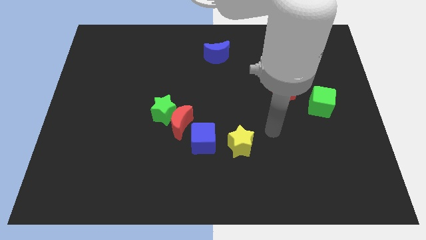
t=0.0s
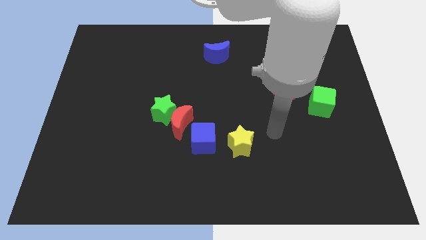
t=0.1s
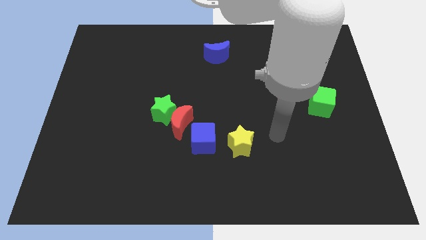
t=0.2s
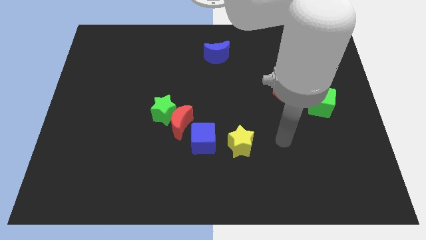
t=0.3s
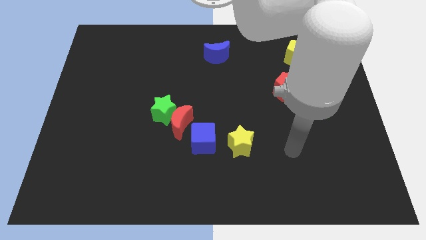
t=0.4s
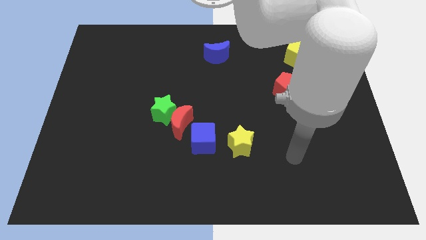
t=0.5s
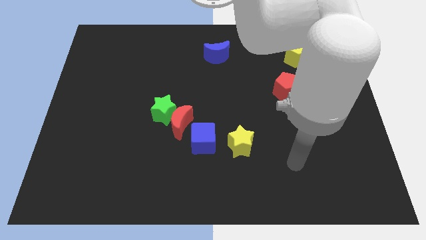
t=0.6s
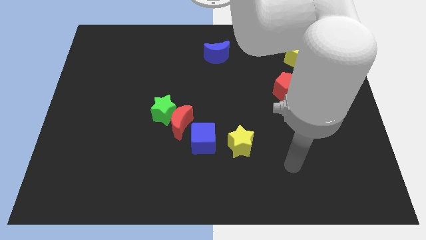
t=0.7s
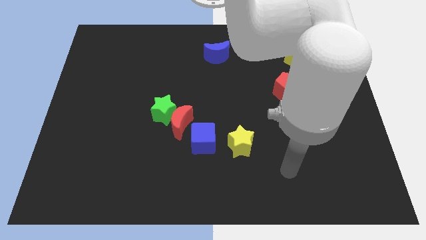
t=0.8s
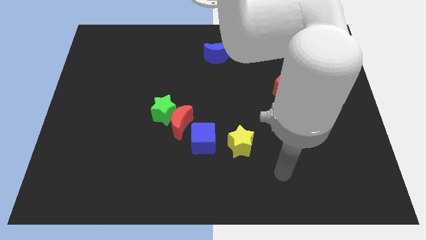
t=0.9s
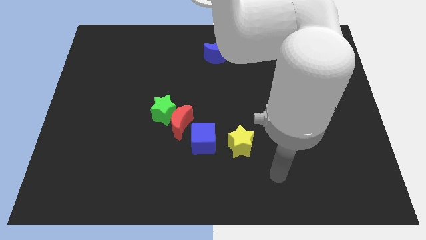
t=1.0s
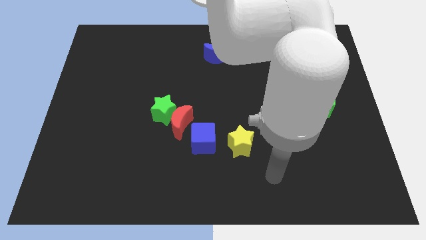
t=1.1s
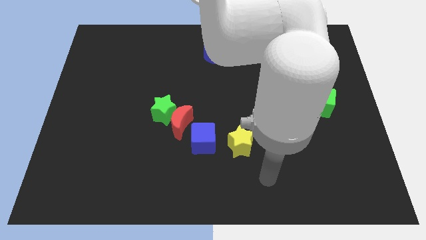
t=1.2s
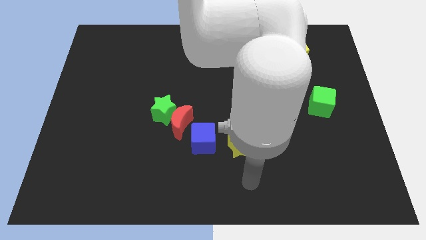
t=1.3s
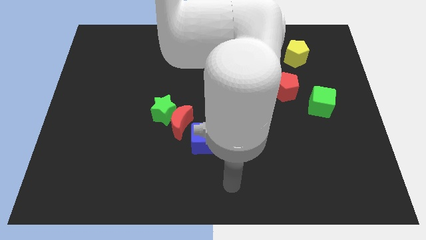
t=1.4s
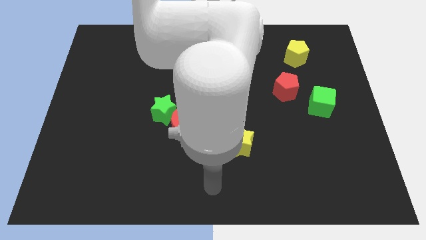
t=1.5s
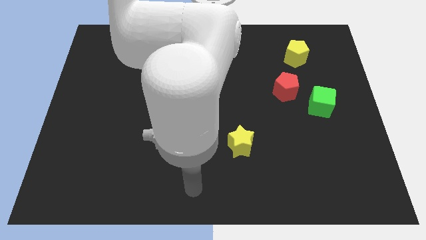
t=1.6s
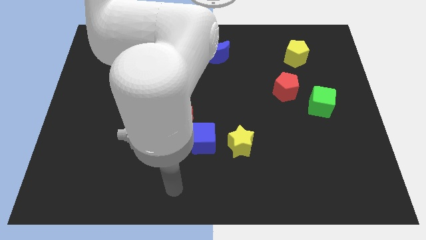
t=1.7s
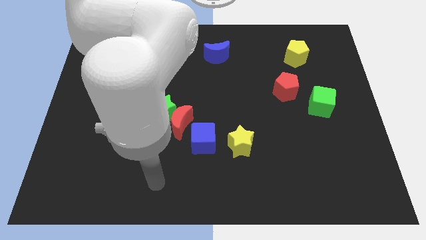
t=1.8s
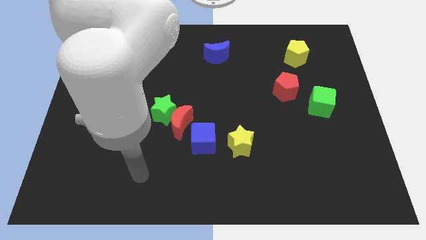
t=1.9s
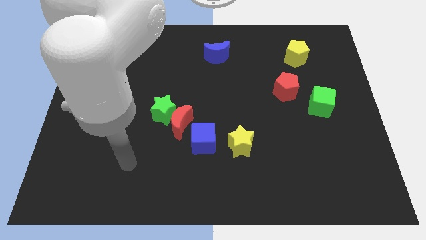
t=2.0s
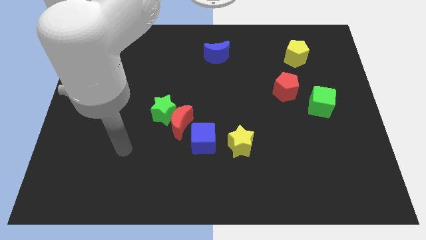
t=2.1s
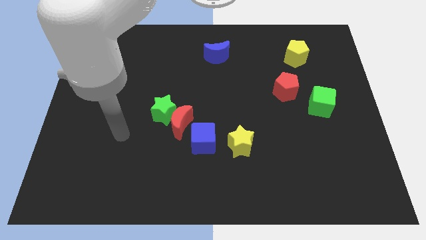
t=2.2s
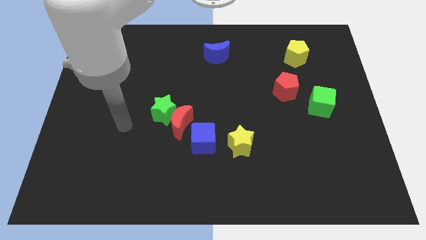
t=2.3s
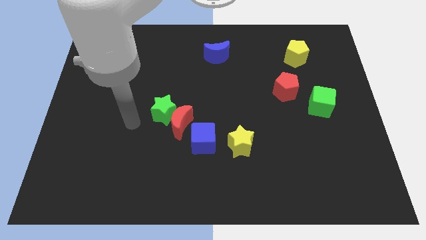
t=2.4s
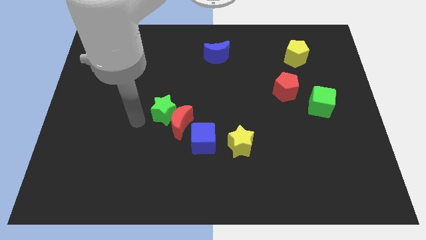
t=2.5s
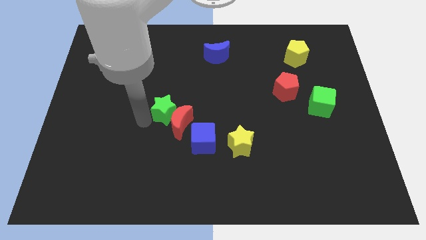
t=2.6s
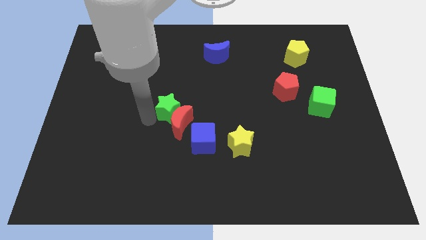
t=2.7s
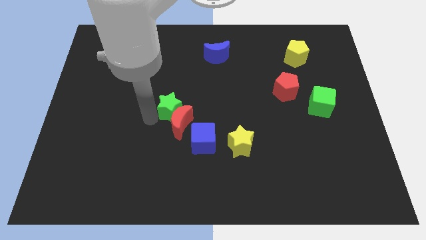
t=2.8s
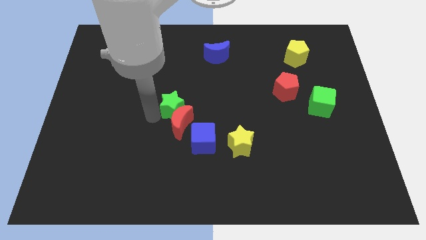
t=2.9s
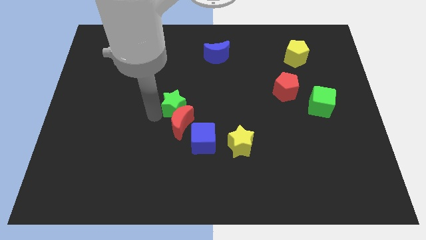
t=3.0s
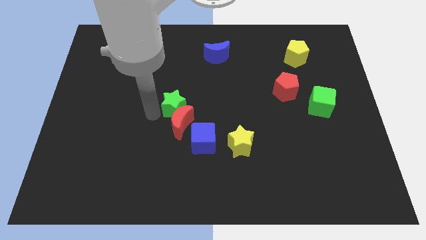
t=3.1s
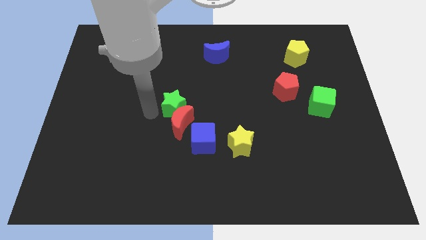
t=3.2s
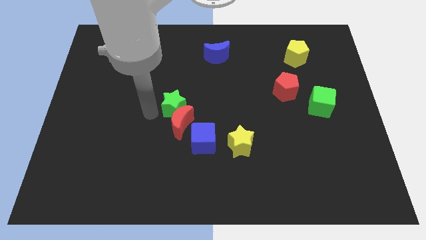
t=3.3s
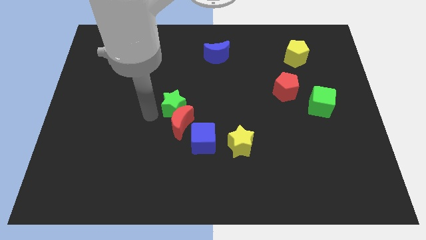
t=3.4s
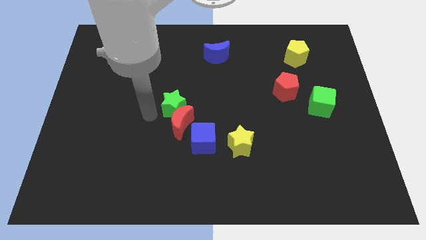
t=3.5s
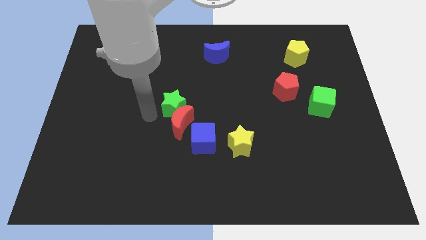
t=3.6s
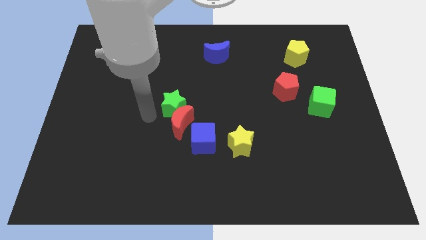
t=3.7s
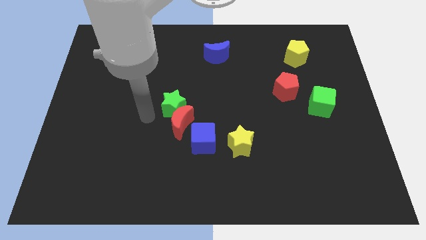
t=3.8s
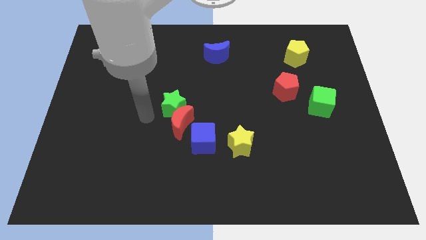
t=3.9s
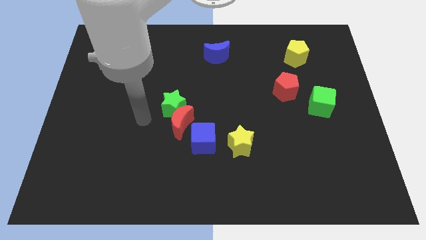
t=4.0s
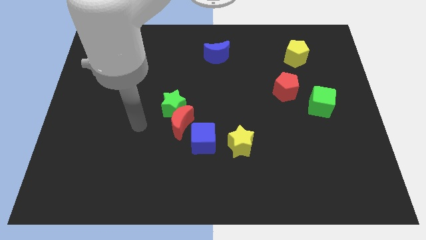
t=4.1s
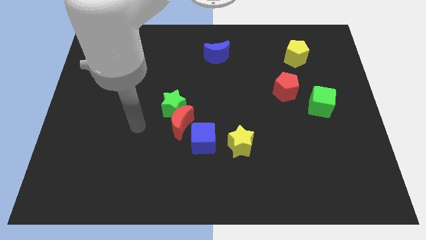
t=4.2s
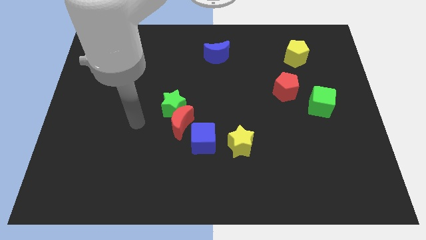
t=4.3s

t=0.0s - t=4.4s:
adjust the green star at the top of red moon

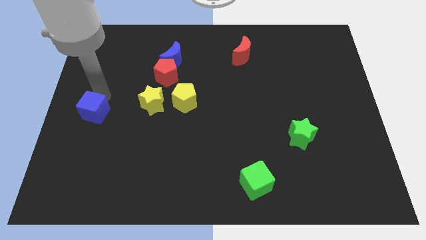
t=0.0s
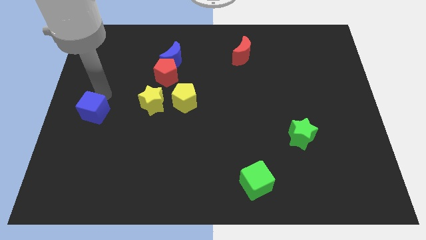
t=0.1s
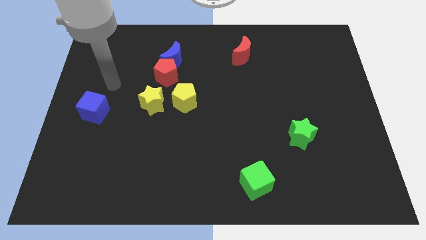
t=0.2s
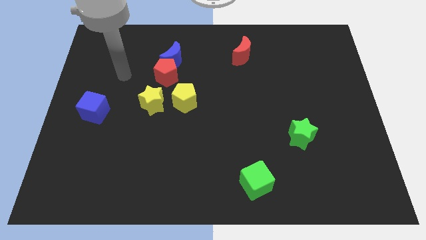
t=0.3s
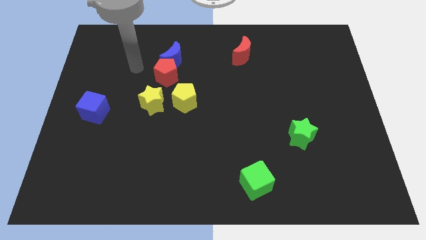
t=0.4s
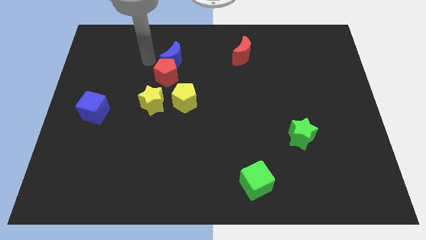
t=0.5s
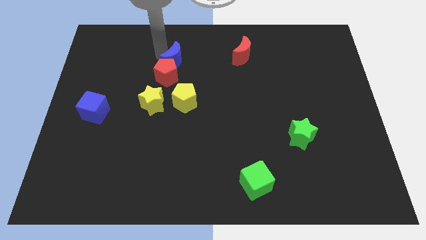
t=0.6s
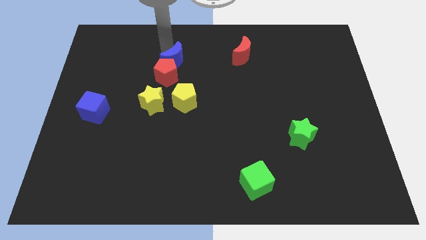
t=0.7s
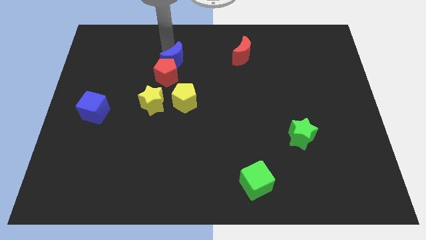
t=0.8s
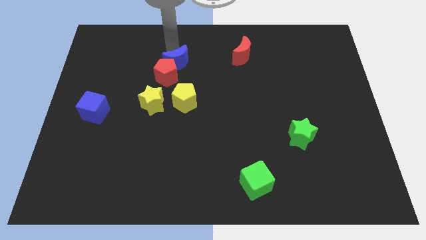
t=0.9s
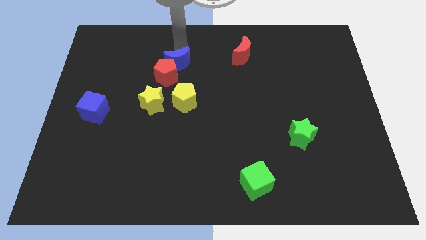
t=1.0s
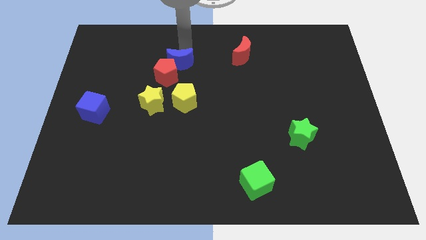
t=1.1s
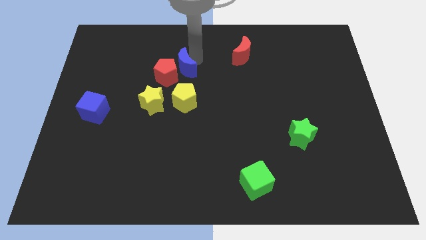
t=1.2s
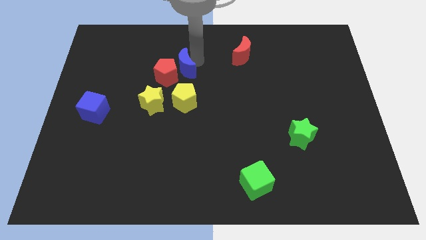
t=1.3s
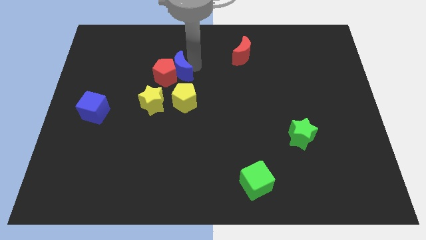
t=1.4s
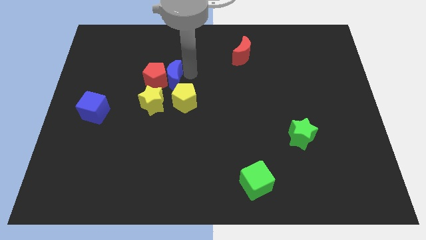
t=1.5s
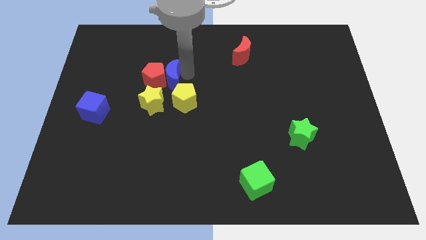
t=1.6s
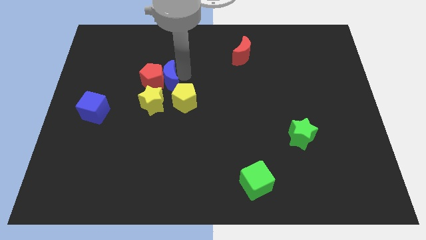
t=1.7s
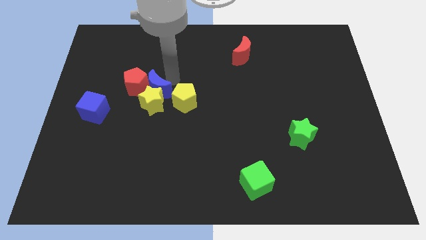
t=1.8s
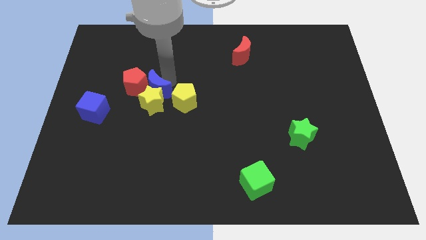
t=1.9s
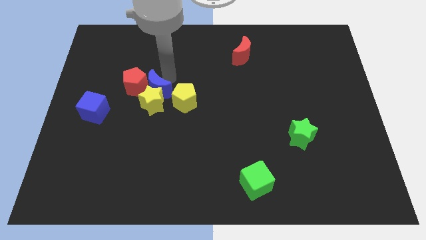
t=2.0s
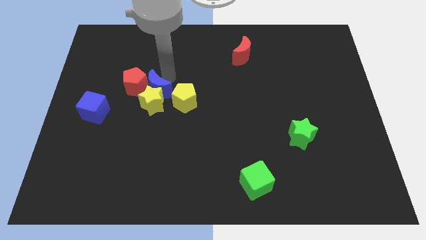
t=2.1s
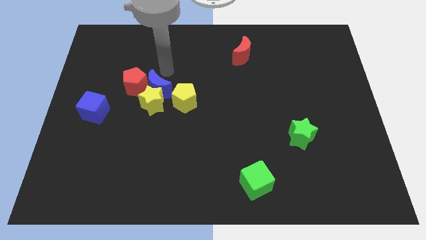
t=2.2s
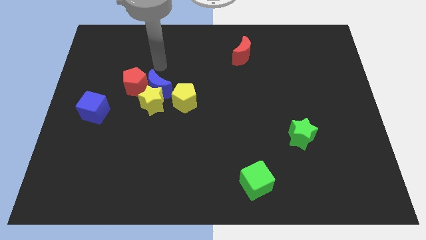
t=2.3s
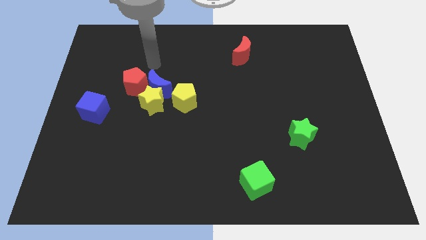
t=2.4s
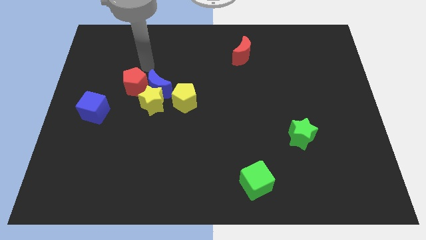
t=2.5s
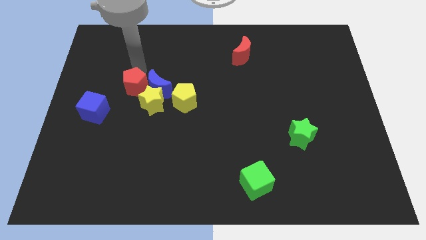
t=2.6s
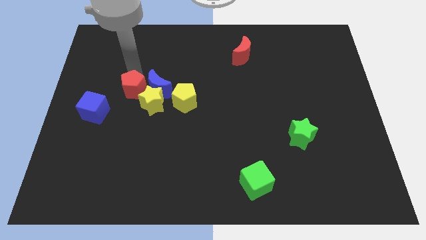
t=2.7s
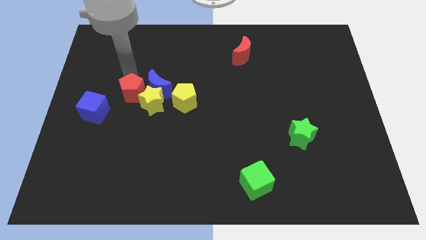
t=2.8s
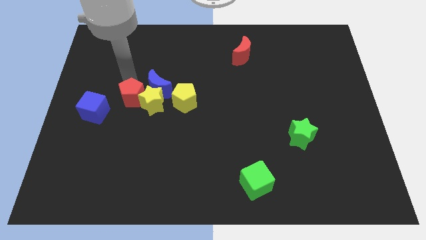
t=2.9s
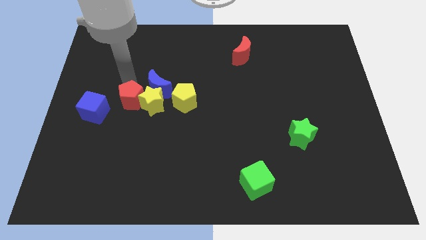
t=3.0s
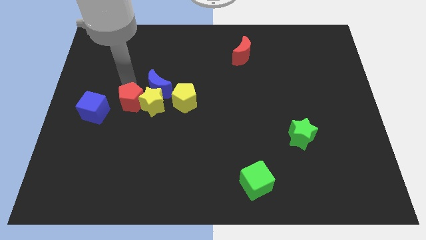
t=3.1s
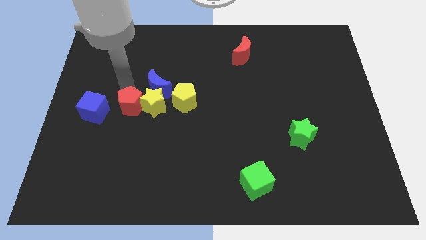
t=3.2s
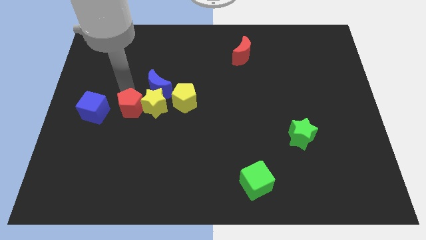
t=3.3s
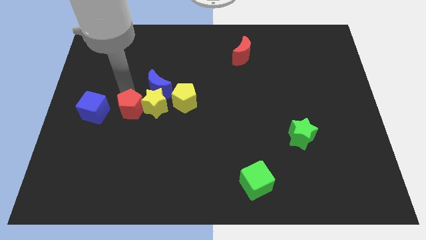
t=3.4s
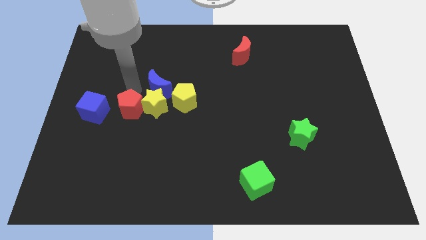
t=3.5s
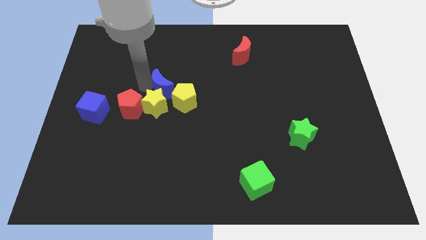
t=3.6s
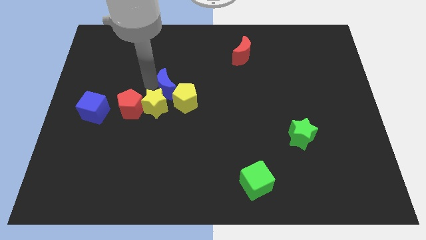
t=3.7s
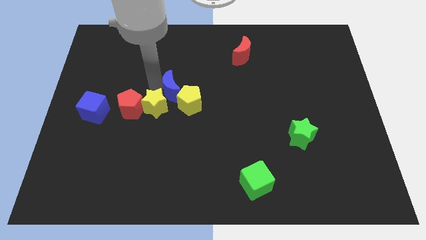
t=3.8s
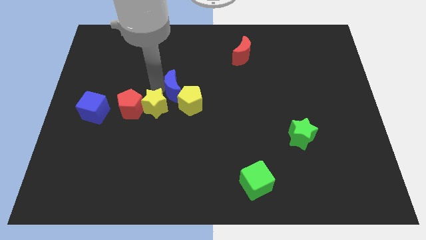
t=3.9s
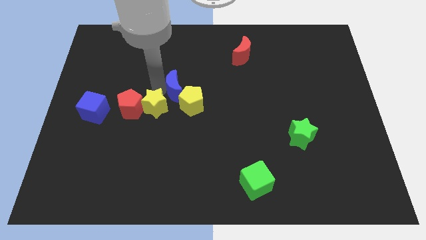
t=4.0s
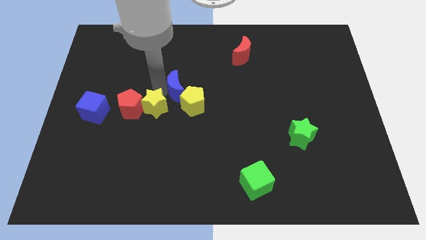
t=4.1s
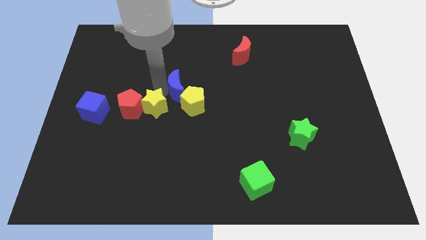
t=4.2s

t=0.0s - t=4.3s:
place the red pentagon between the yellow star and blue cube

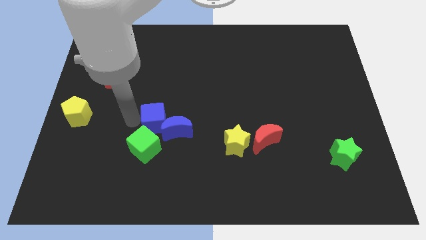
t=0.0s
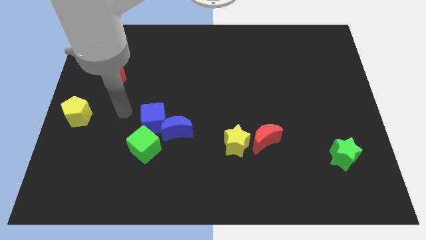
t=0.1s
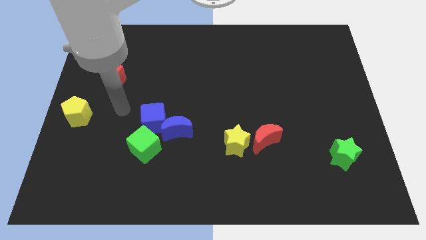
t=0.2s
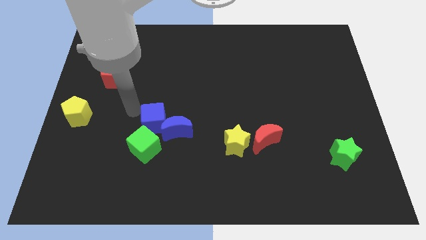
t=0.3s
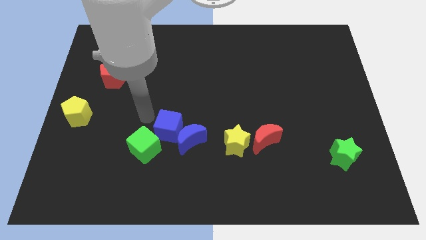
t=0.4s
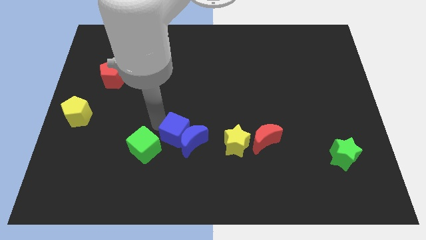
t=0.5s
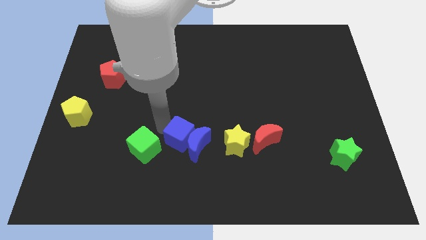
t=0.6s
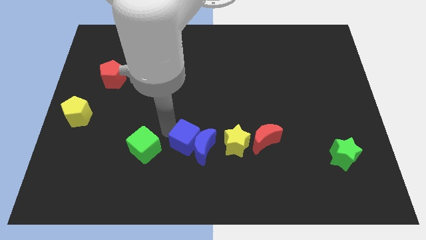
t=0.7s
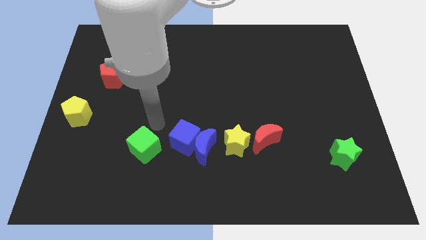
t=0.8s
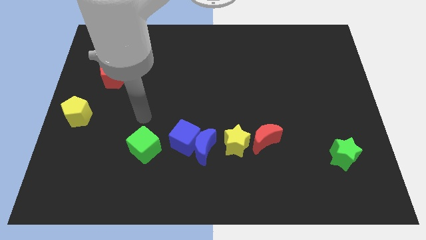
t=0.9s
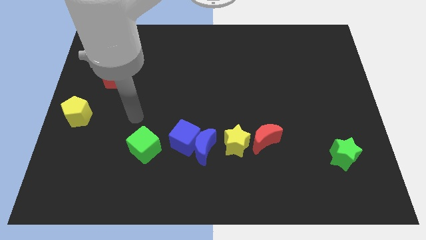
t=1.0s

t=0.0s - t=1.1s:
push the blue crescent with blue cube to the left of the yellow star
